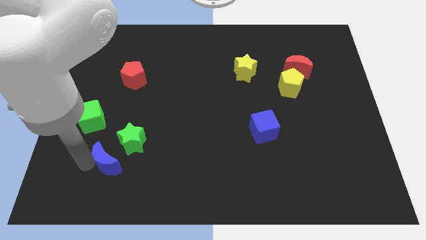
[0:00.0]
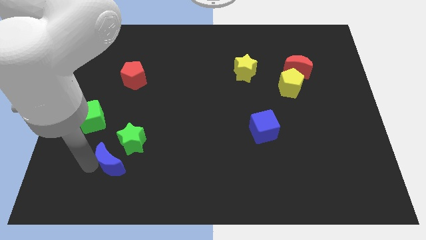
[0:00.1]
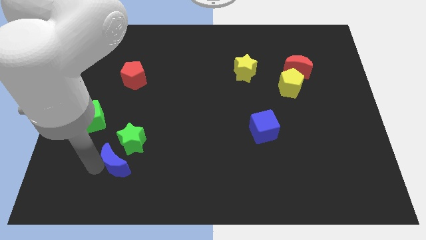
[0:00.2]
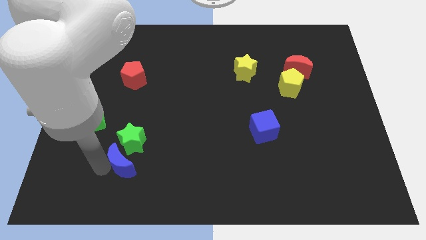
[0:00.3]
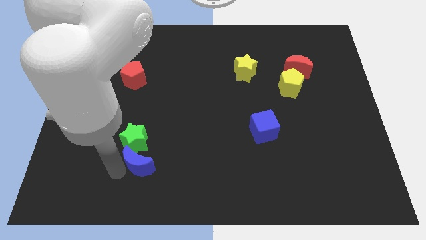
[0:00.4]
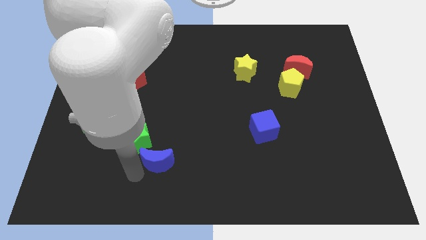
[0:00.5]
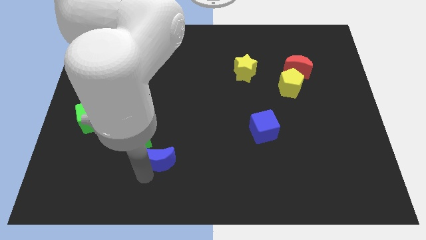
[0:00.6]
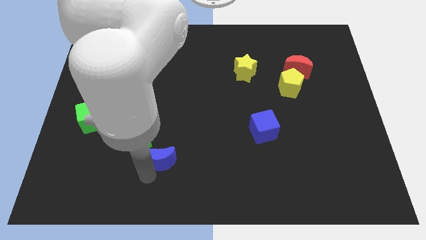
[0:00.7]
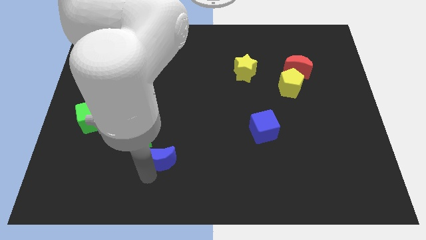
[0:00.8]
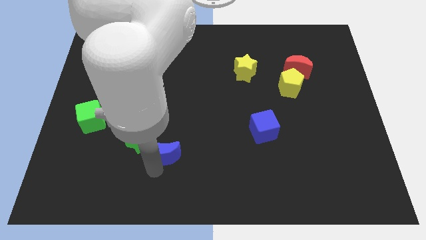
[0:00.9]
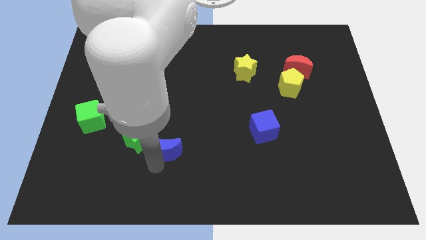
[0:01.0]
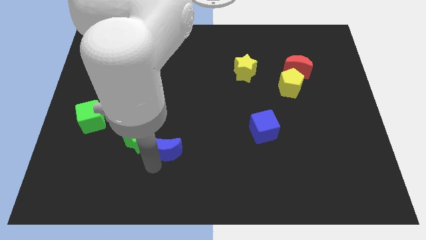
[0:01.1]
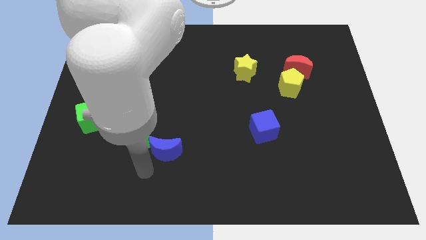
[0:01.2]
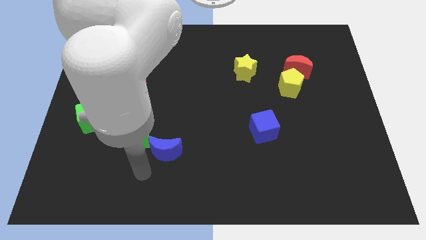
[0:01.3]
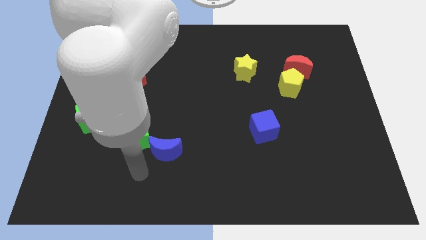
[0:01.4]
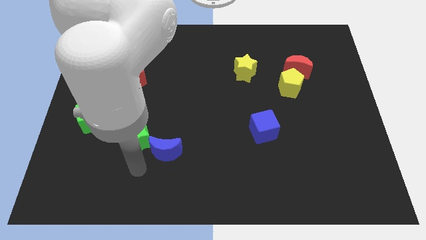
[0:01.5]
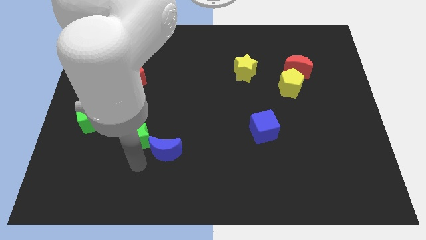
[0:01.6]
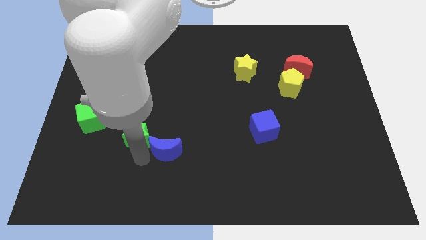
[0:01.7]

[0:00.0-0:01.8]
slide the blue crescent to the right of the green star

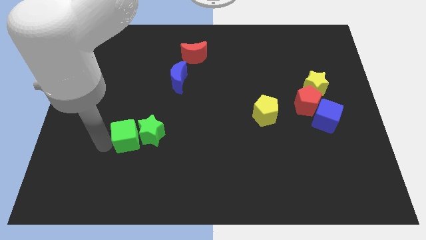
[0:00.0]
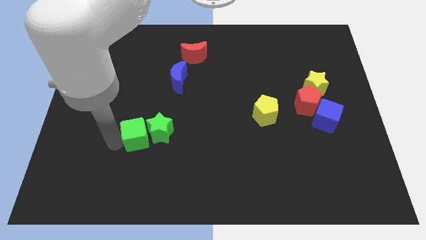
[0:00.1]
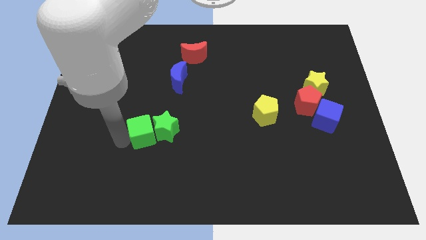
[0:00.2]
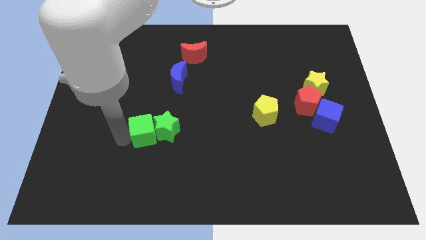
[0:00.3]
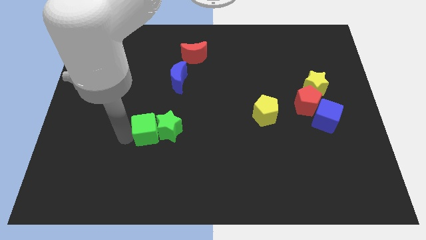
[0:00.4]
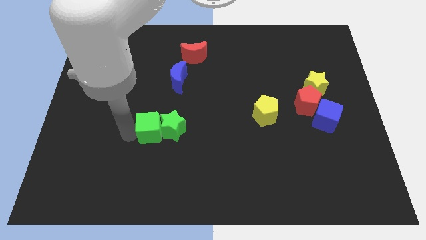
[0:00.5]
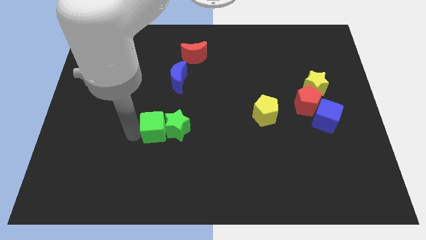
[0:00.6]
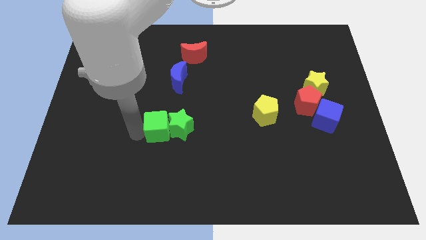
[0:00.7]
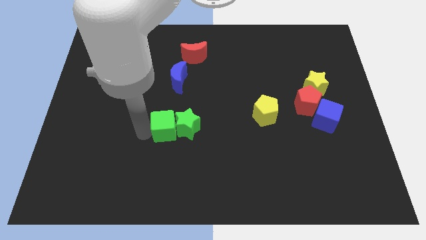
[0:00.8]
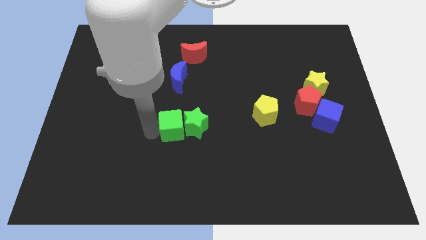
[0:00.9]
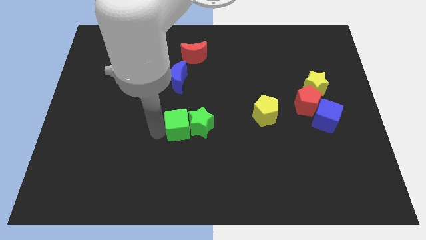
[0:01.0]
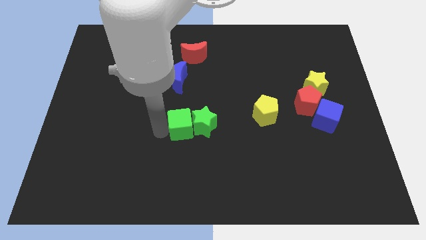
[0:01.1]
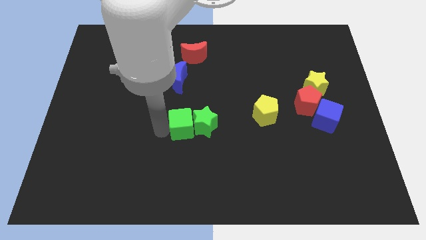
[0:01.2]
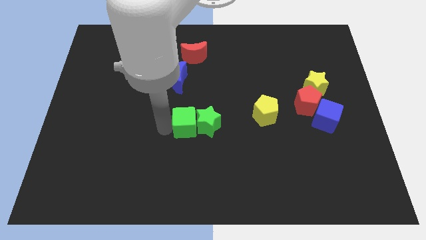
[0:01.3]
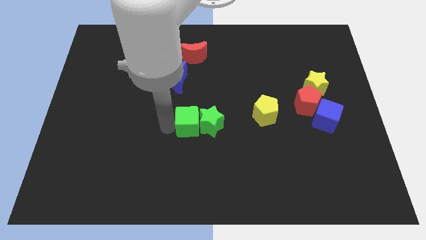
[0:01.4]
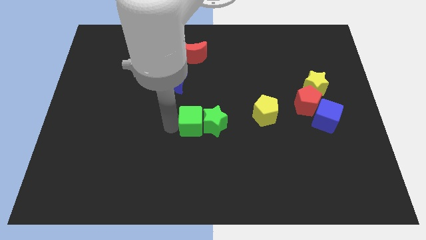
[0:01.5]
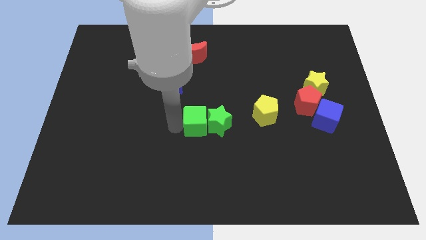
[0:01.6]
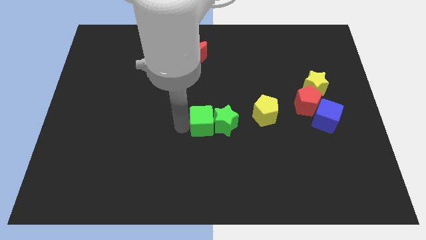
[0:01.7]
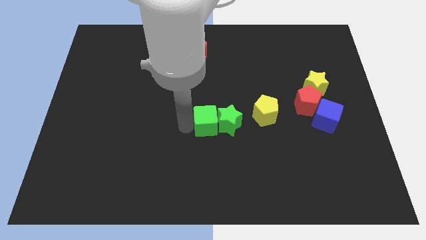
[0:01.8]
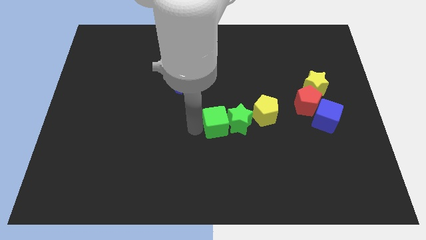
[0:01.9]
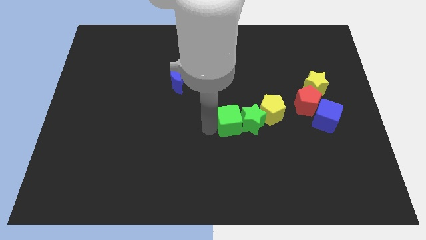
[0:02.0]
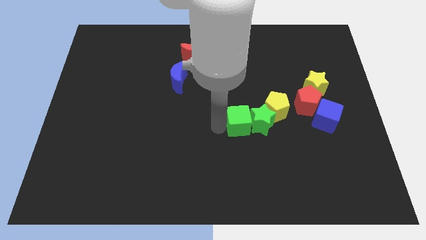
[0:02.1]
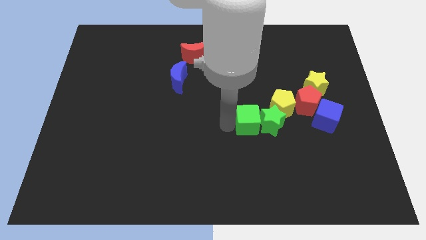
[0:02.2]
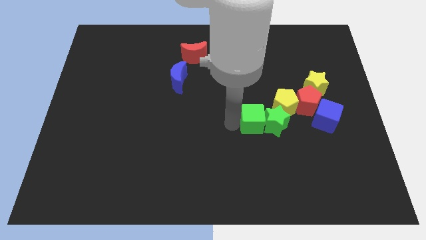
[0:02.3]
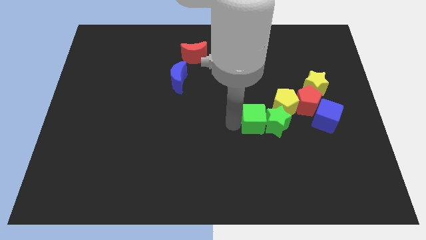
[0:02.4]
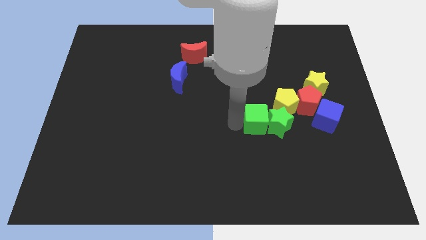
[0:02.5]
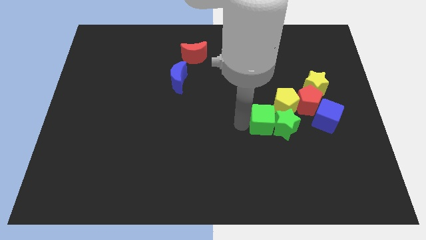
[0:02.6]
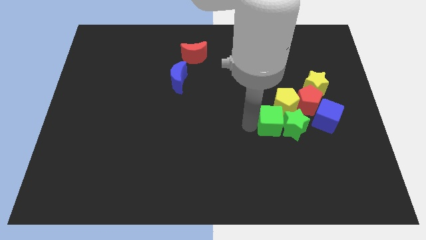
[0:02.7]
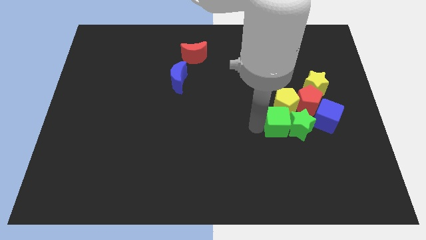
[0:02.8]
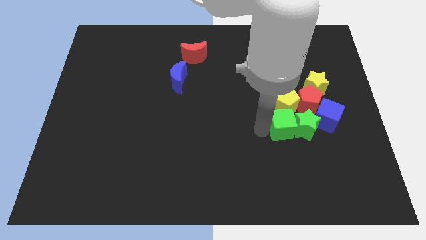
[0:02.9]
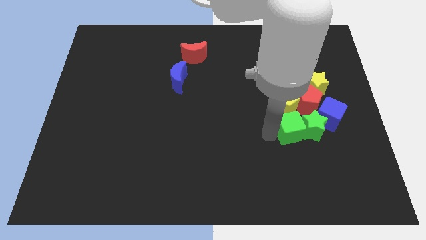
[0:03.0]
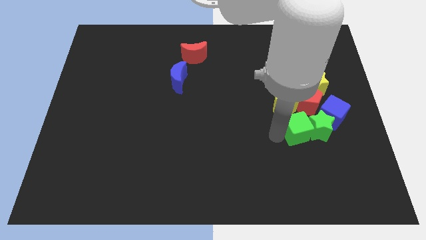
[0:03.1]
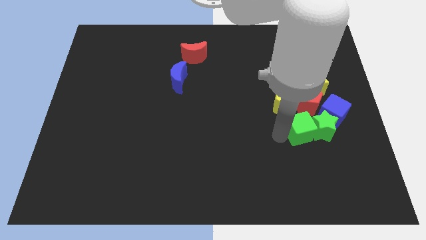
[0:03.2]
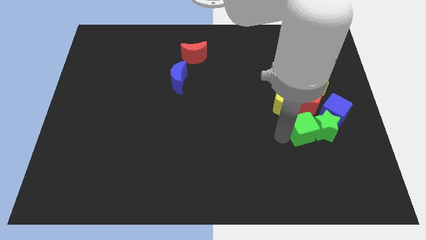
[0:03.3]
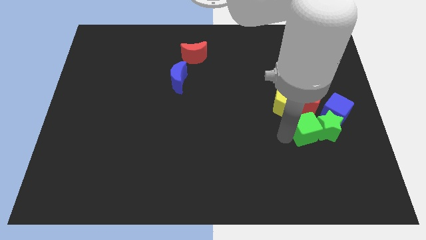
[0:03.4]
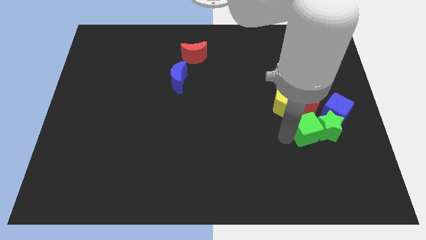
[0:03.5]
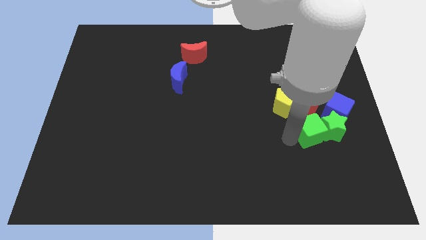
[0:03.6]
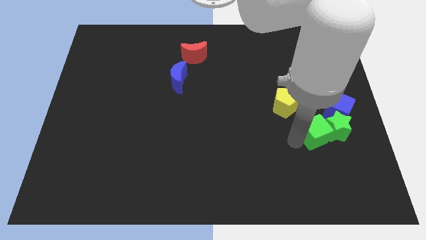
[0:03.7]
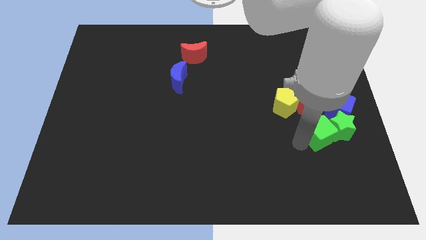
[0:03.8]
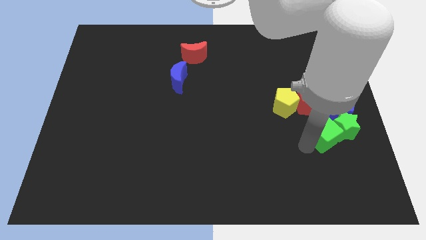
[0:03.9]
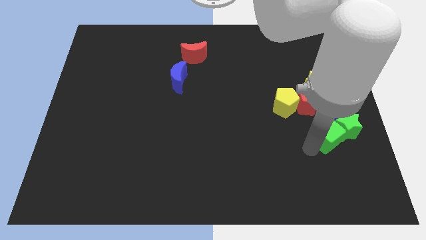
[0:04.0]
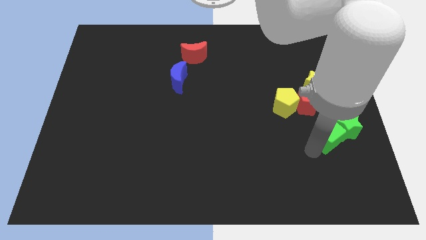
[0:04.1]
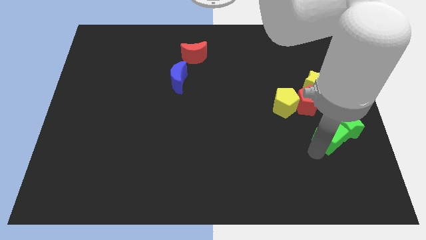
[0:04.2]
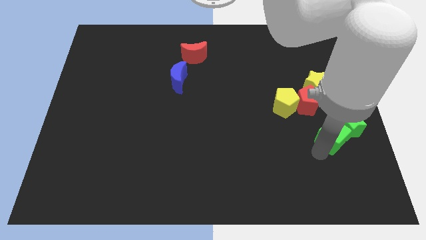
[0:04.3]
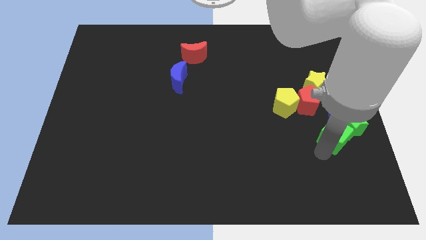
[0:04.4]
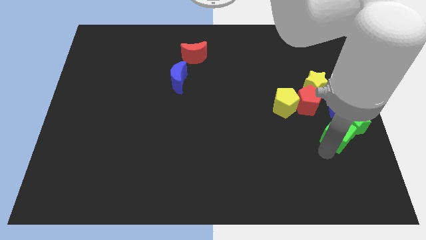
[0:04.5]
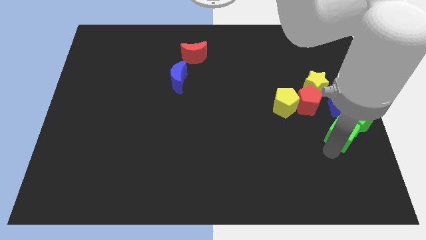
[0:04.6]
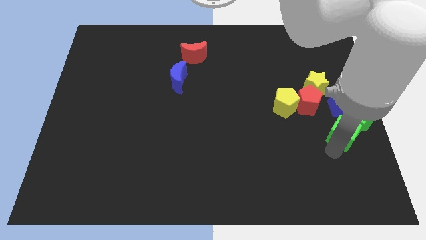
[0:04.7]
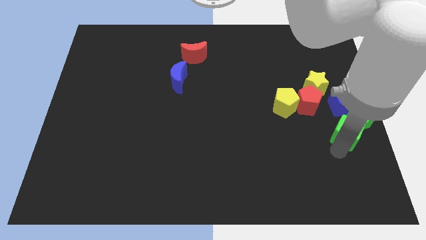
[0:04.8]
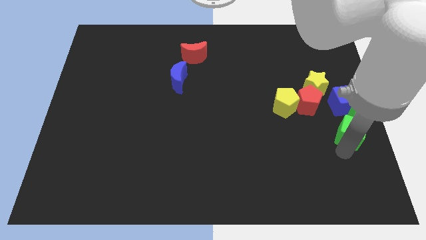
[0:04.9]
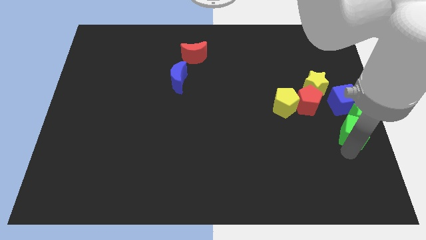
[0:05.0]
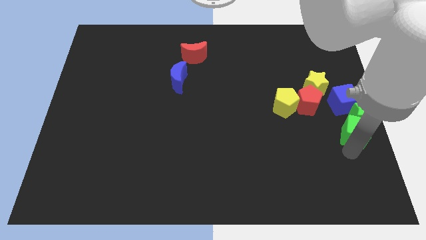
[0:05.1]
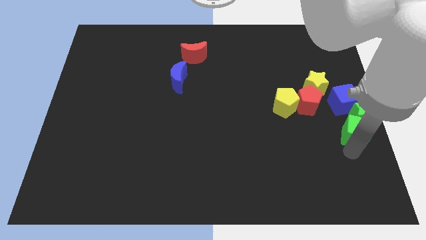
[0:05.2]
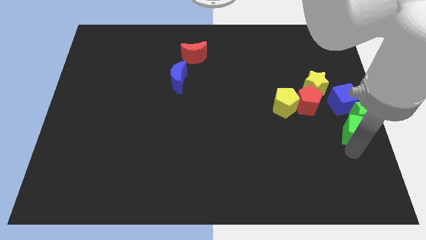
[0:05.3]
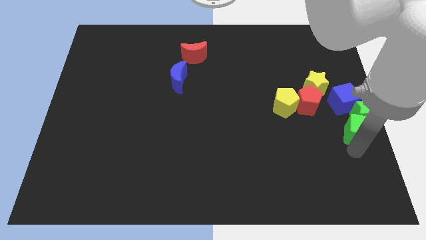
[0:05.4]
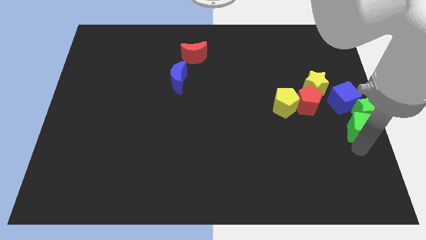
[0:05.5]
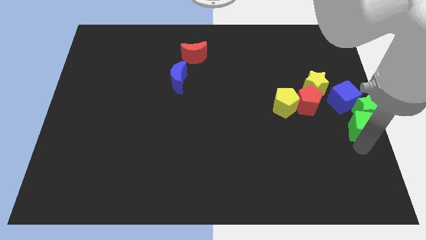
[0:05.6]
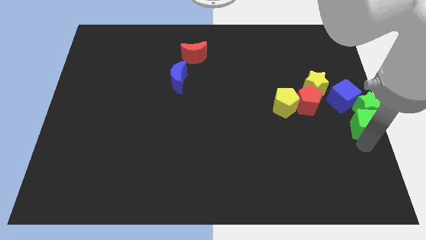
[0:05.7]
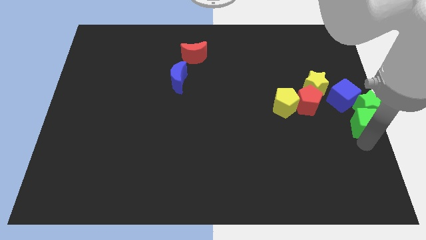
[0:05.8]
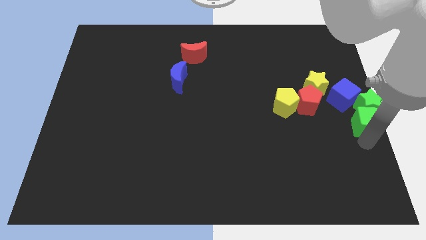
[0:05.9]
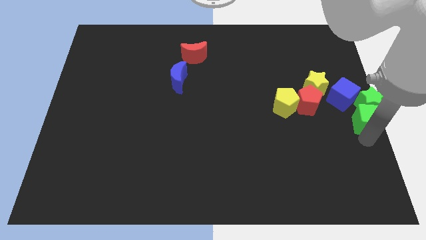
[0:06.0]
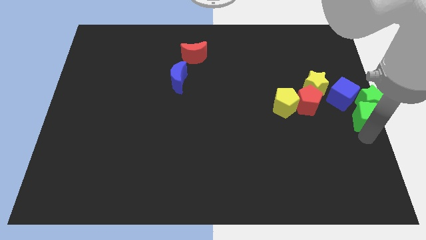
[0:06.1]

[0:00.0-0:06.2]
push the green blocks towards the right center of the board

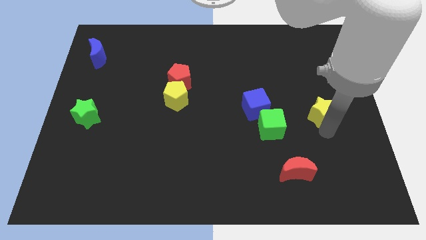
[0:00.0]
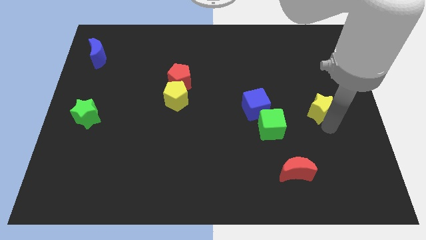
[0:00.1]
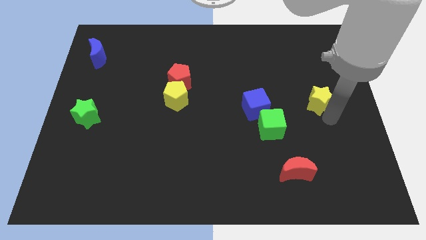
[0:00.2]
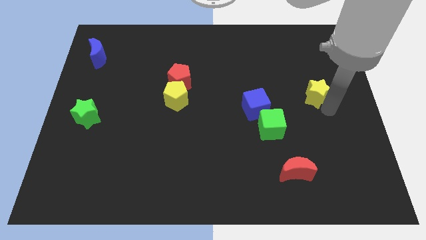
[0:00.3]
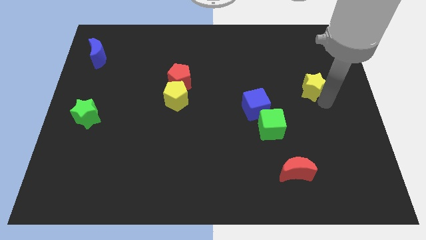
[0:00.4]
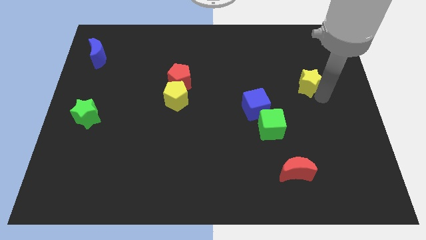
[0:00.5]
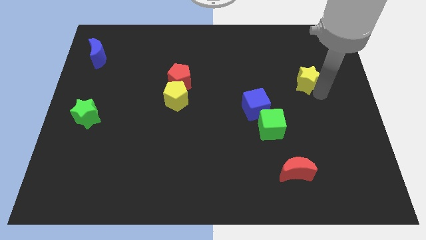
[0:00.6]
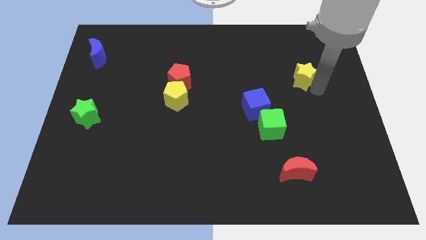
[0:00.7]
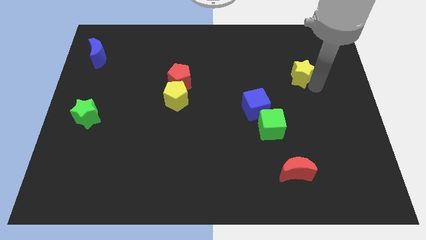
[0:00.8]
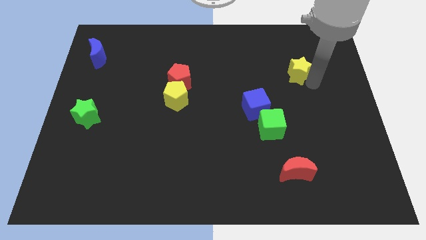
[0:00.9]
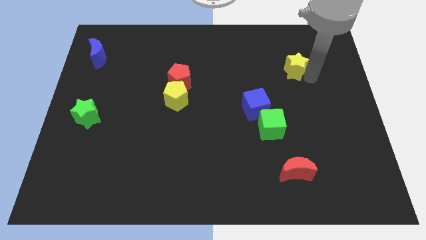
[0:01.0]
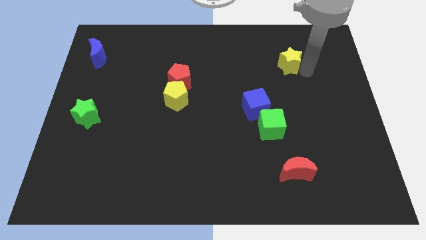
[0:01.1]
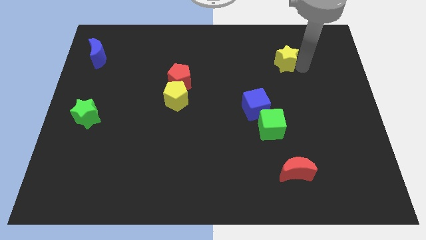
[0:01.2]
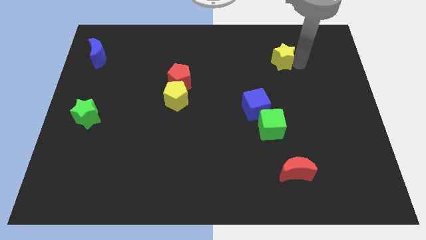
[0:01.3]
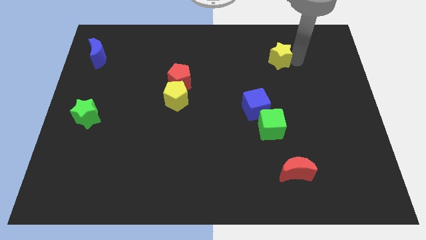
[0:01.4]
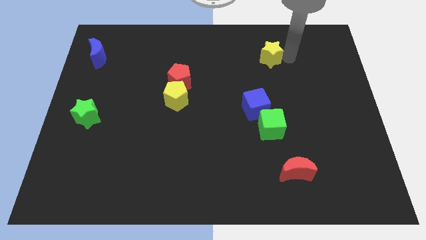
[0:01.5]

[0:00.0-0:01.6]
place the yellow star diagonally on the top right side of the blue cube
